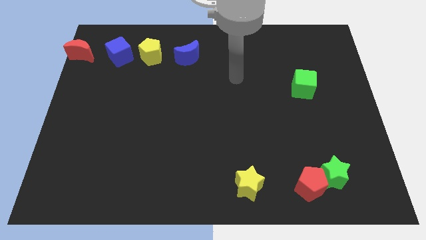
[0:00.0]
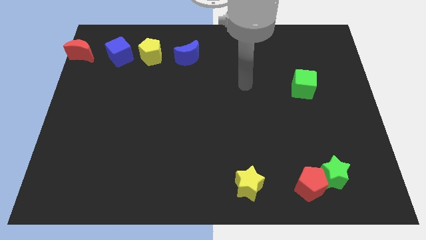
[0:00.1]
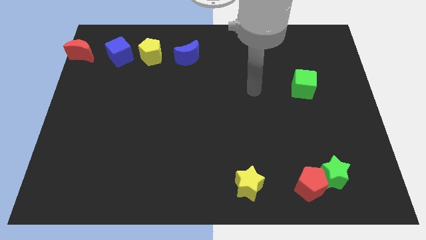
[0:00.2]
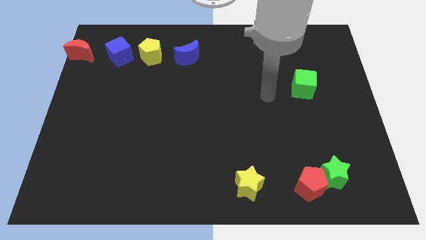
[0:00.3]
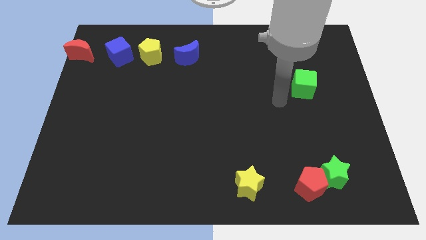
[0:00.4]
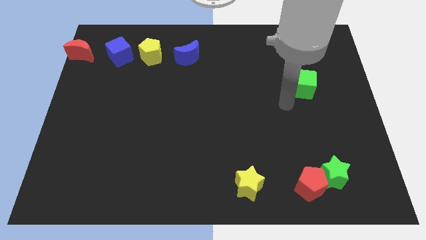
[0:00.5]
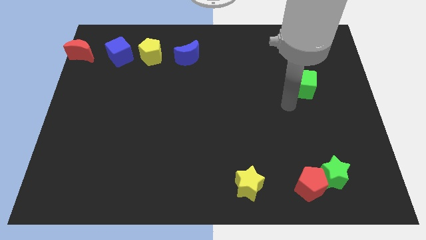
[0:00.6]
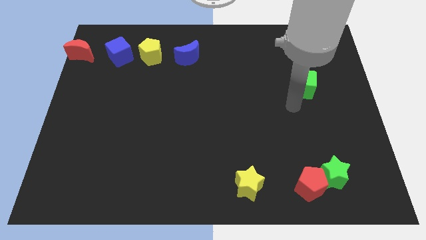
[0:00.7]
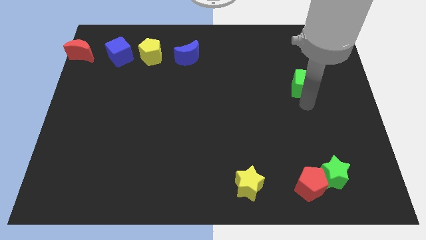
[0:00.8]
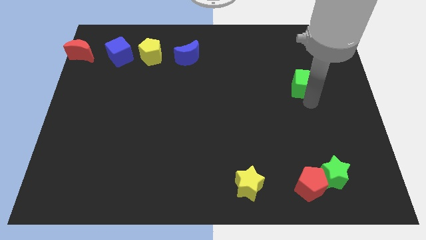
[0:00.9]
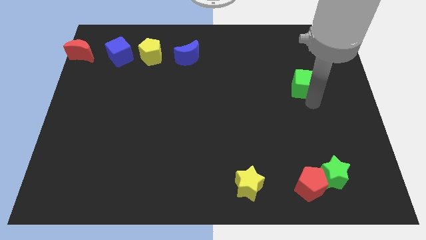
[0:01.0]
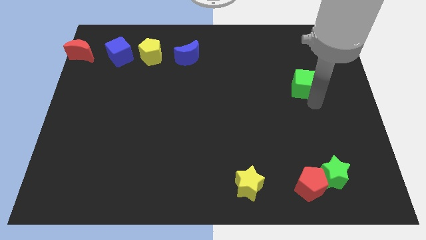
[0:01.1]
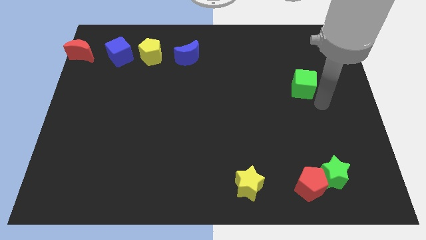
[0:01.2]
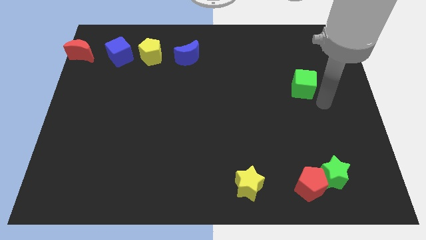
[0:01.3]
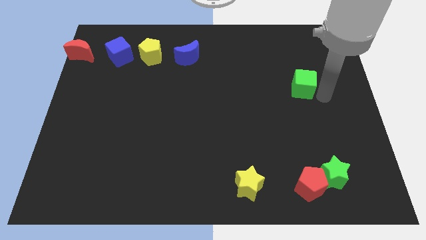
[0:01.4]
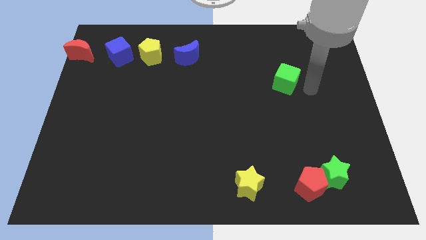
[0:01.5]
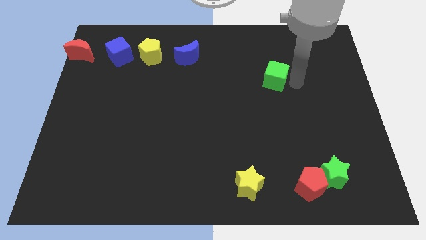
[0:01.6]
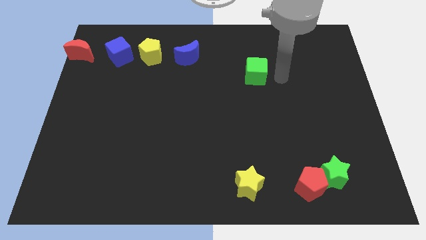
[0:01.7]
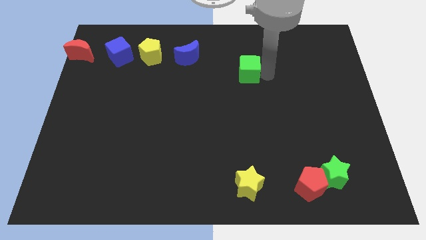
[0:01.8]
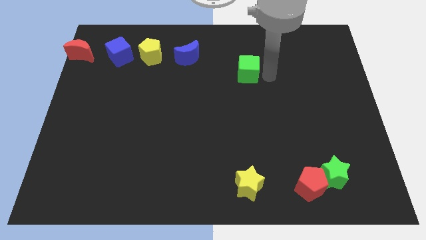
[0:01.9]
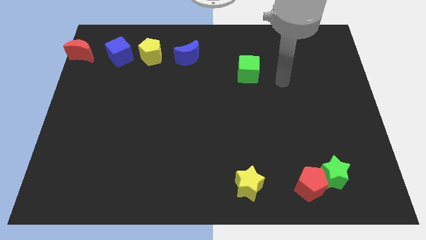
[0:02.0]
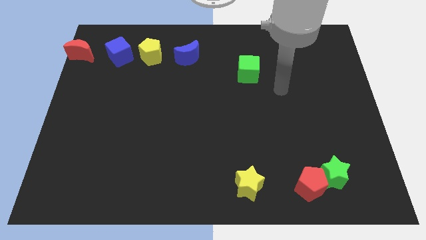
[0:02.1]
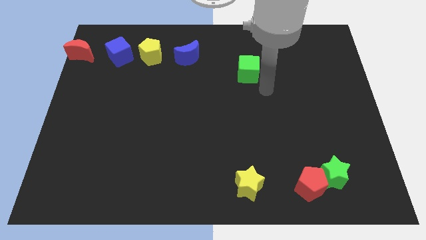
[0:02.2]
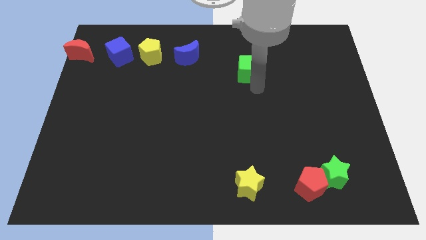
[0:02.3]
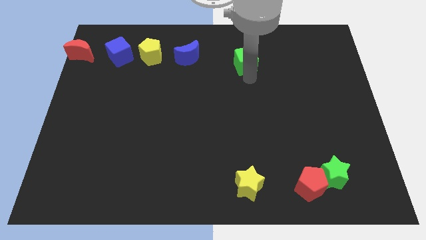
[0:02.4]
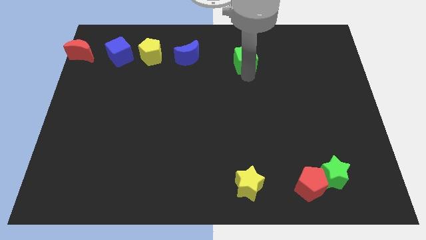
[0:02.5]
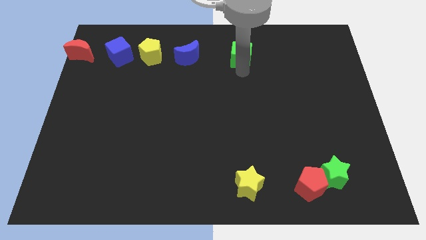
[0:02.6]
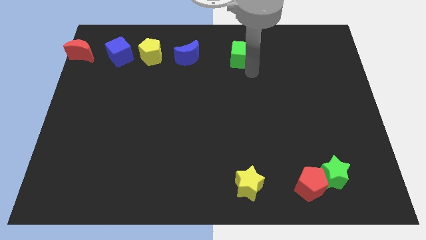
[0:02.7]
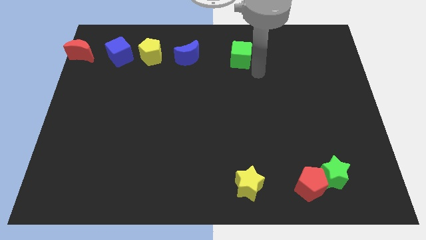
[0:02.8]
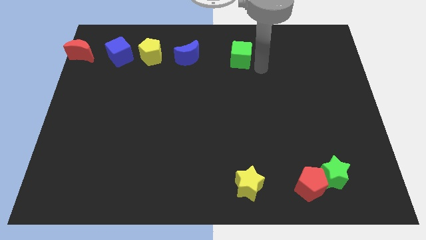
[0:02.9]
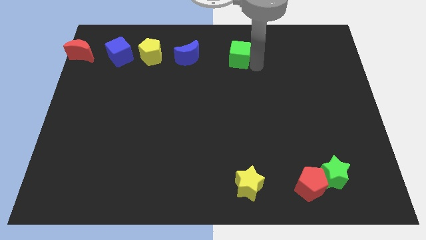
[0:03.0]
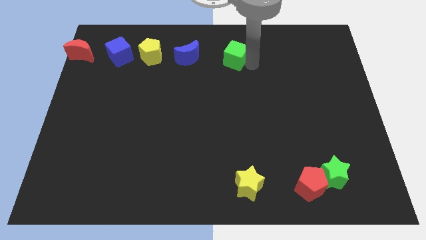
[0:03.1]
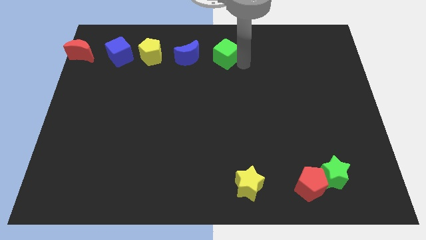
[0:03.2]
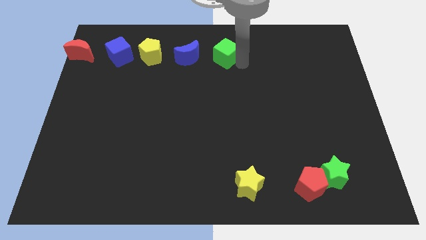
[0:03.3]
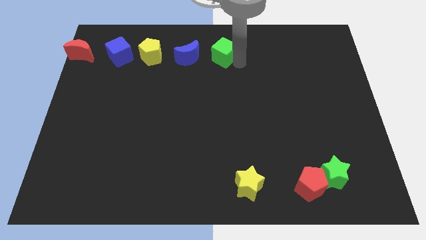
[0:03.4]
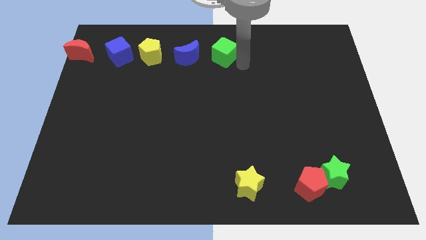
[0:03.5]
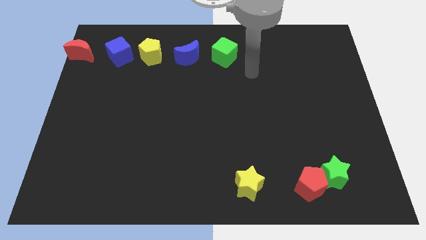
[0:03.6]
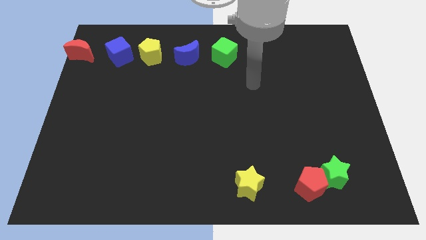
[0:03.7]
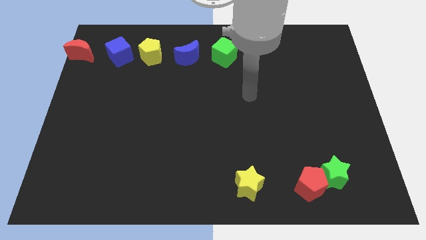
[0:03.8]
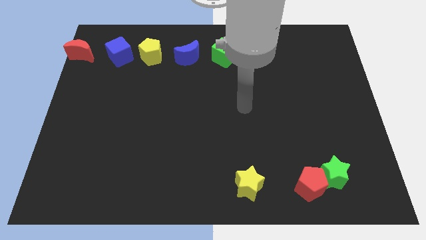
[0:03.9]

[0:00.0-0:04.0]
move the green cube to the right side of the blue crescent

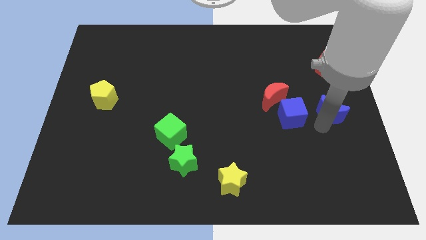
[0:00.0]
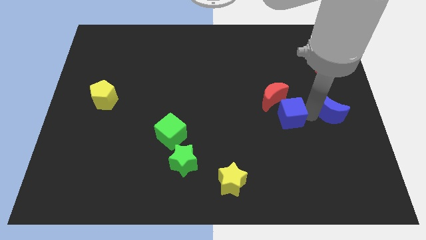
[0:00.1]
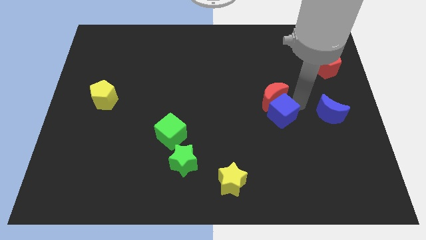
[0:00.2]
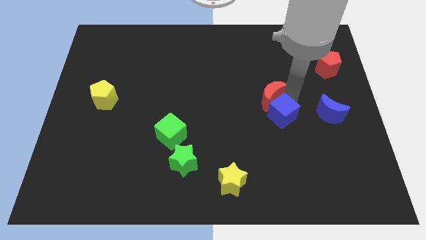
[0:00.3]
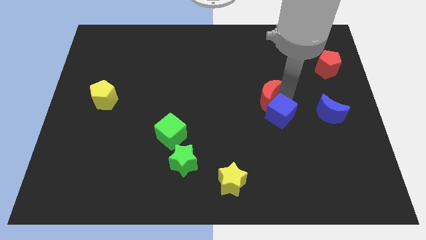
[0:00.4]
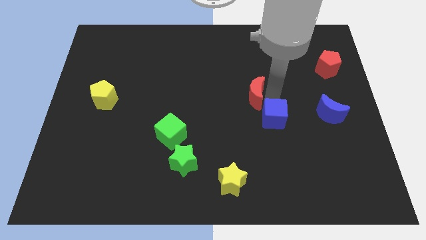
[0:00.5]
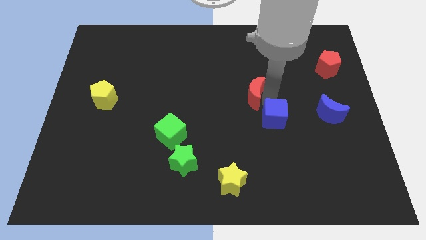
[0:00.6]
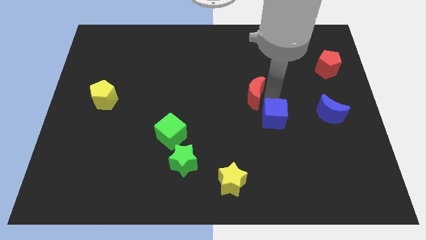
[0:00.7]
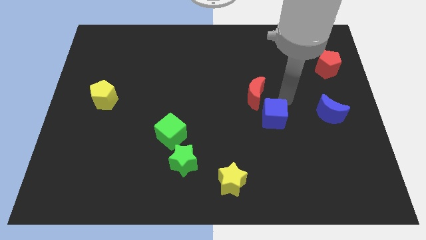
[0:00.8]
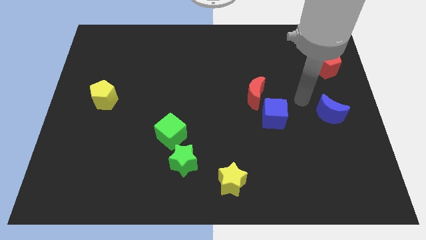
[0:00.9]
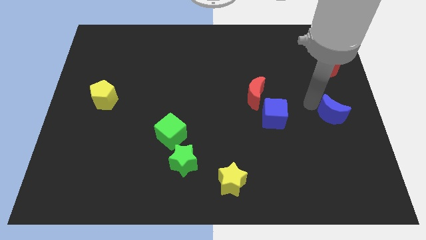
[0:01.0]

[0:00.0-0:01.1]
separate red moon and the blue cube

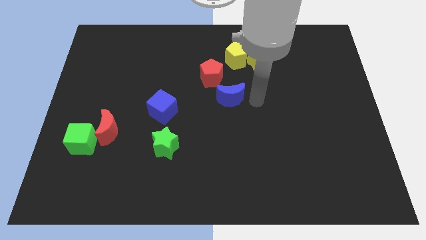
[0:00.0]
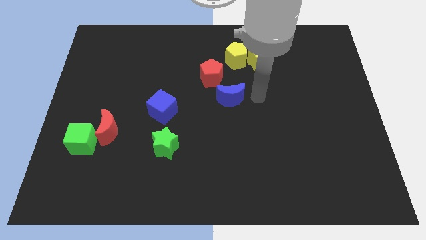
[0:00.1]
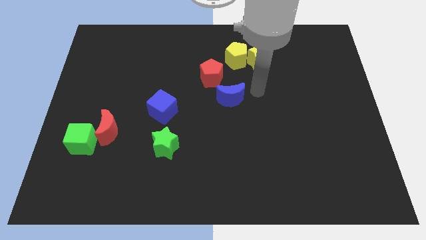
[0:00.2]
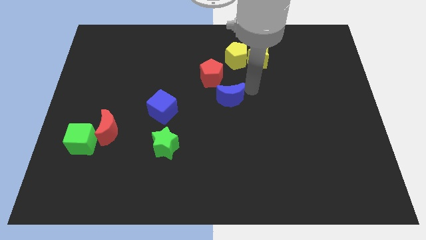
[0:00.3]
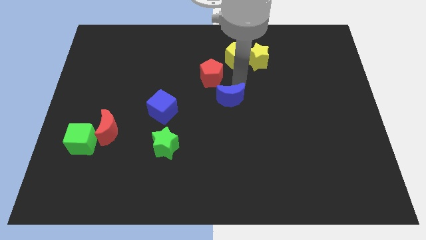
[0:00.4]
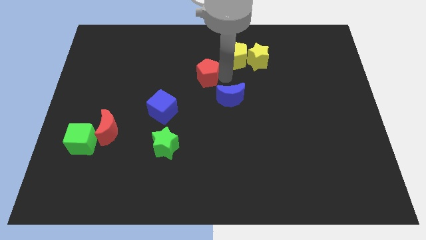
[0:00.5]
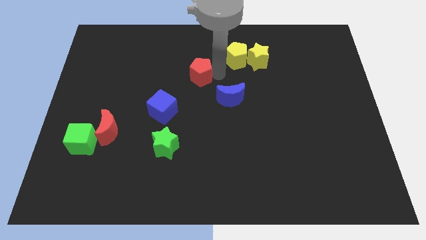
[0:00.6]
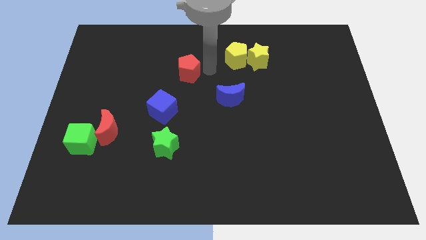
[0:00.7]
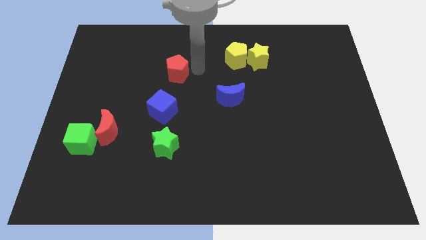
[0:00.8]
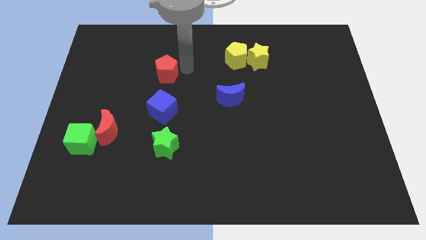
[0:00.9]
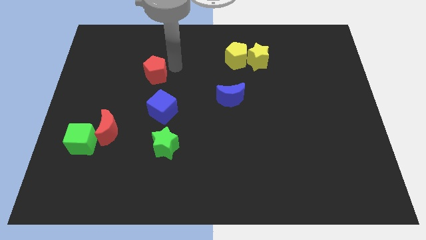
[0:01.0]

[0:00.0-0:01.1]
place the red pentagon above the blue cube

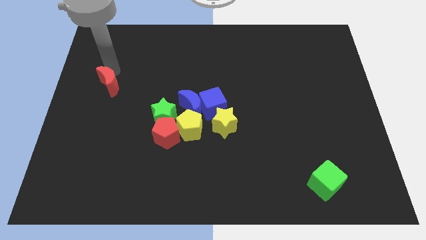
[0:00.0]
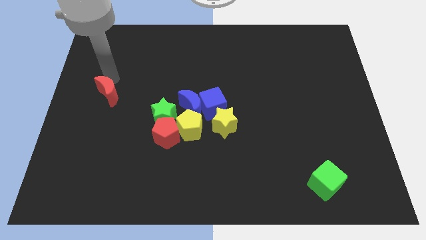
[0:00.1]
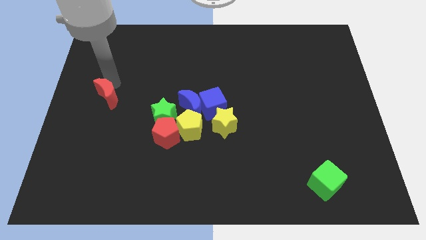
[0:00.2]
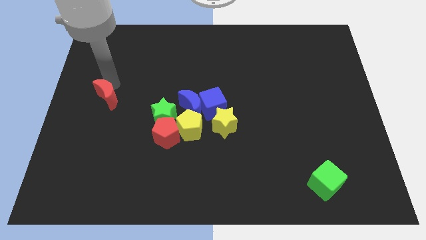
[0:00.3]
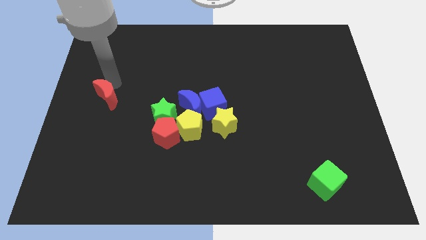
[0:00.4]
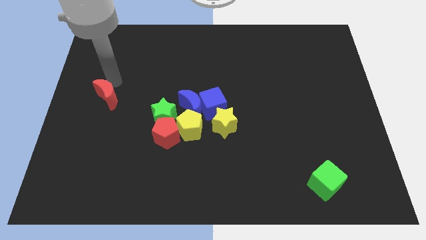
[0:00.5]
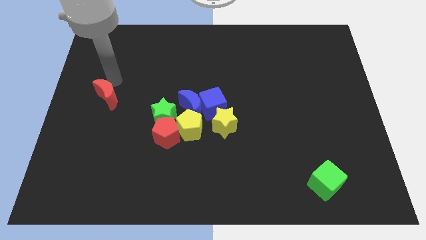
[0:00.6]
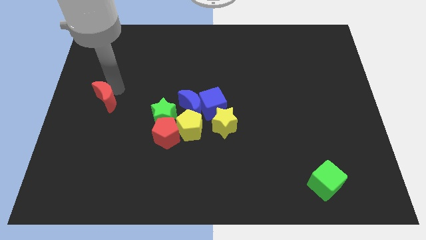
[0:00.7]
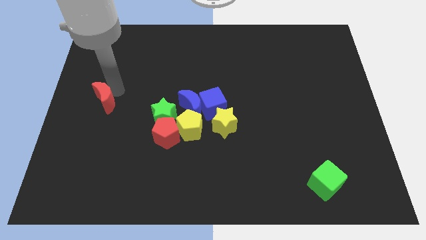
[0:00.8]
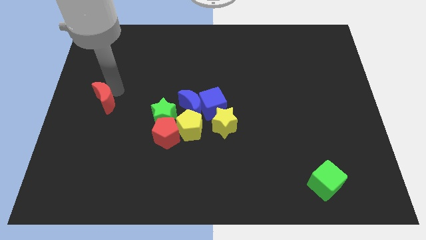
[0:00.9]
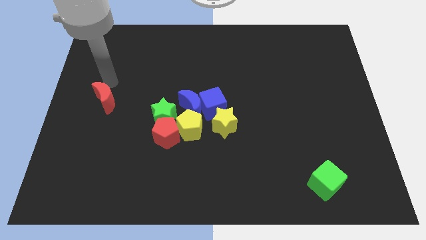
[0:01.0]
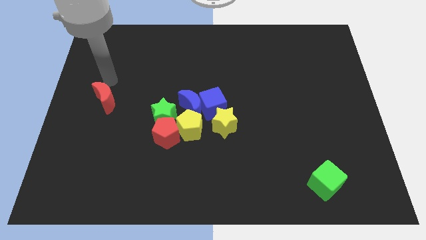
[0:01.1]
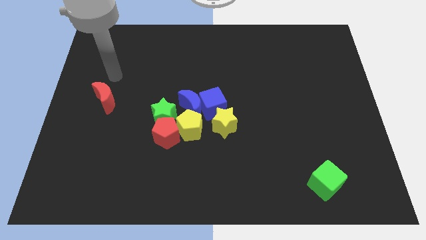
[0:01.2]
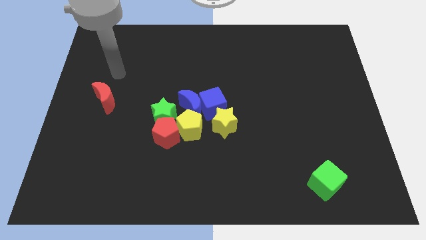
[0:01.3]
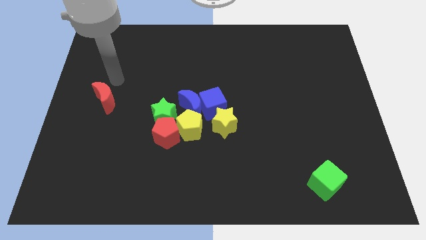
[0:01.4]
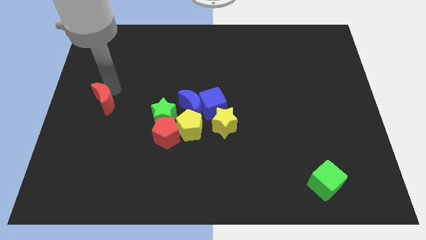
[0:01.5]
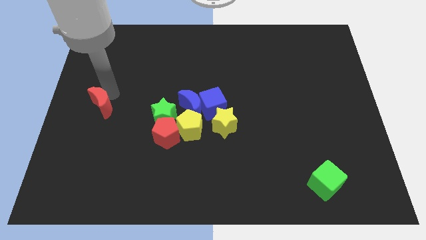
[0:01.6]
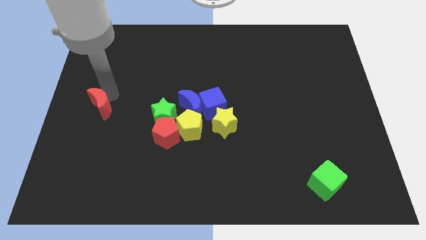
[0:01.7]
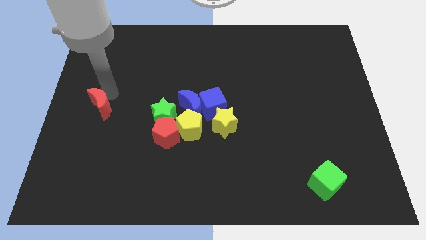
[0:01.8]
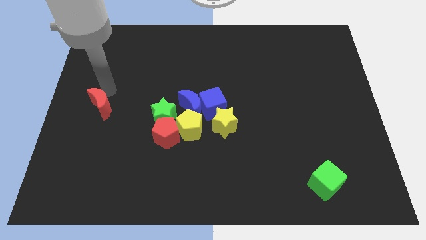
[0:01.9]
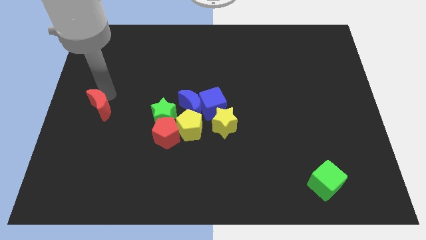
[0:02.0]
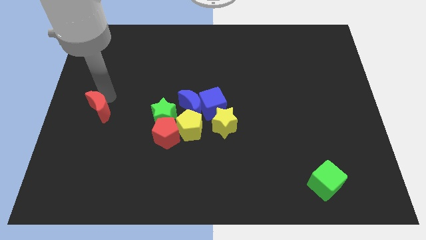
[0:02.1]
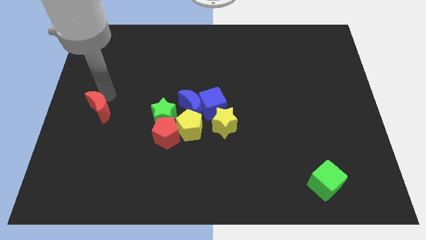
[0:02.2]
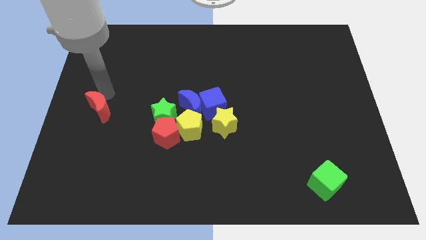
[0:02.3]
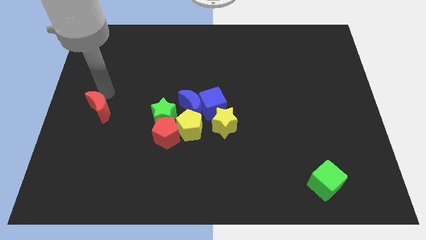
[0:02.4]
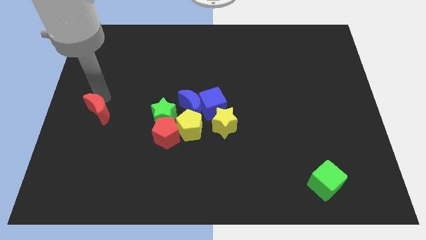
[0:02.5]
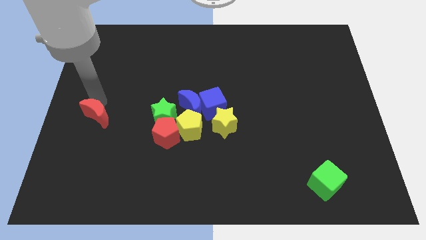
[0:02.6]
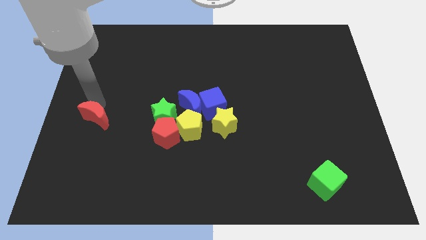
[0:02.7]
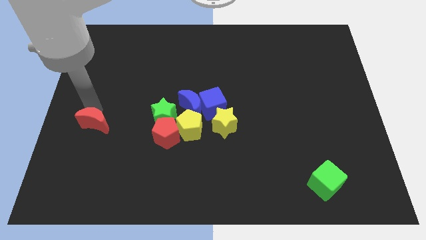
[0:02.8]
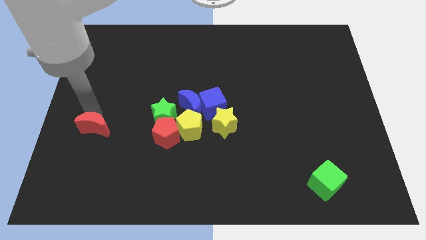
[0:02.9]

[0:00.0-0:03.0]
place the red moon horizontally to the red pentagon
